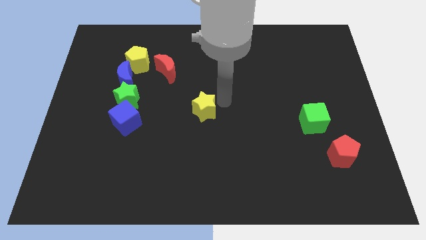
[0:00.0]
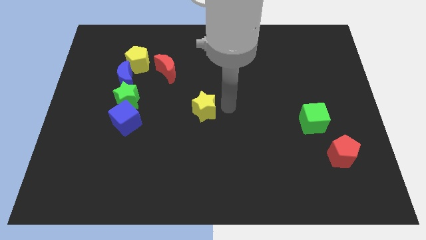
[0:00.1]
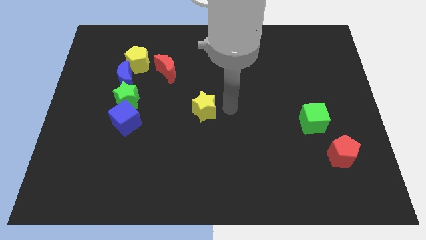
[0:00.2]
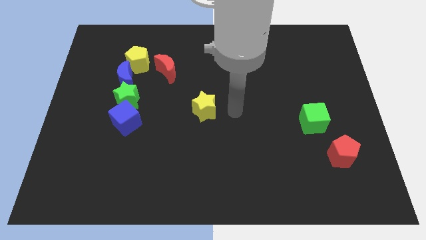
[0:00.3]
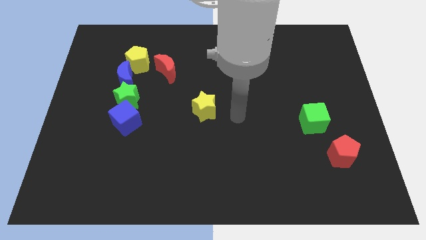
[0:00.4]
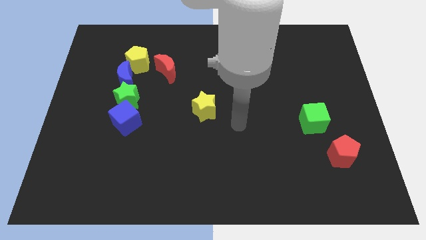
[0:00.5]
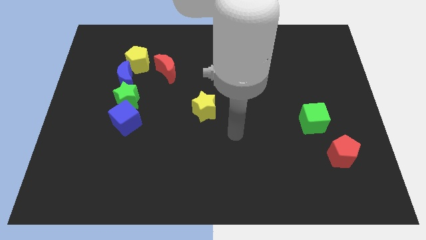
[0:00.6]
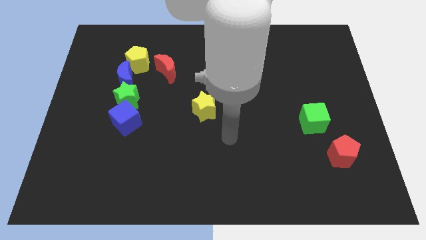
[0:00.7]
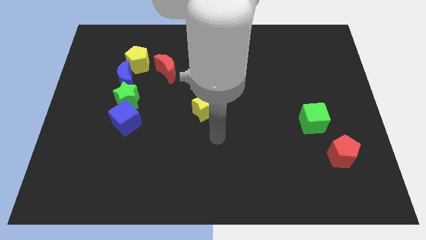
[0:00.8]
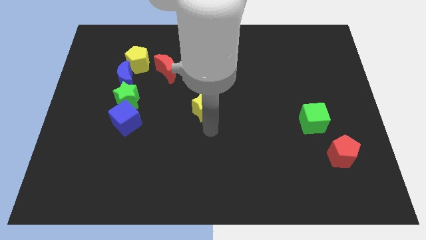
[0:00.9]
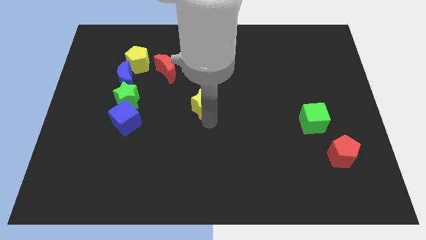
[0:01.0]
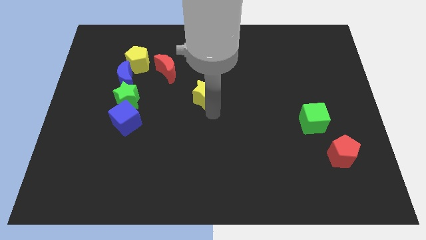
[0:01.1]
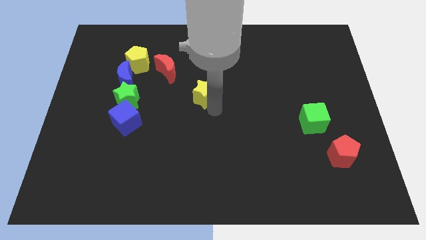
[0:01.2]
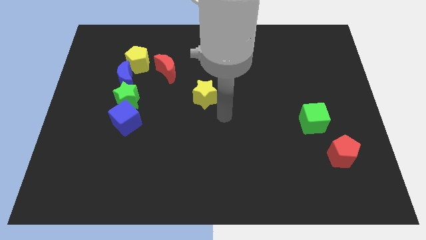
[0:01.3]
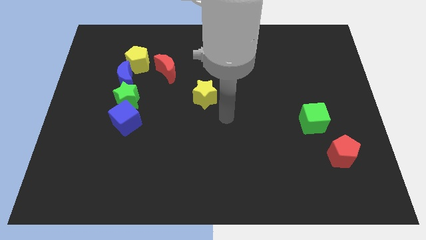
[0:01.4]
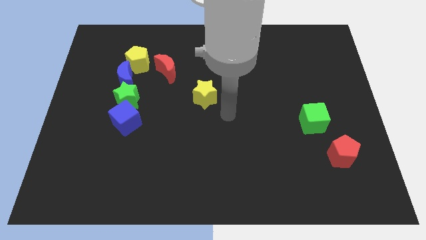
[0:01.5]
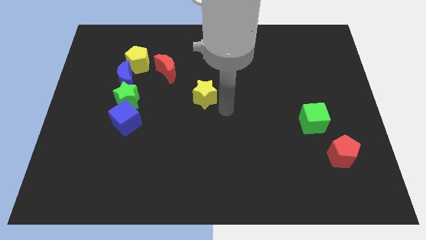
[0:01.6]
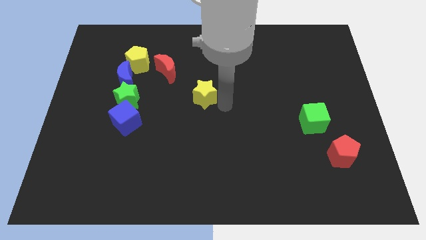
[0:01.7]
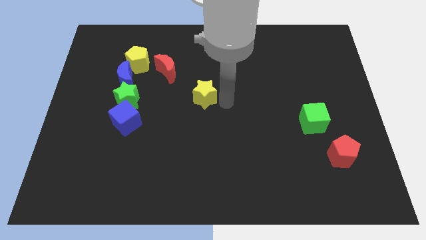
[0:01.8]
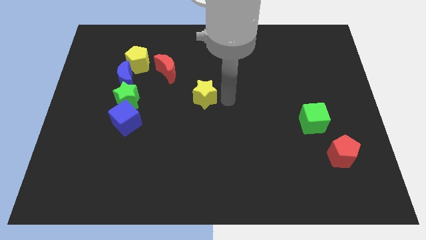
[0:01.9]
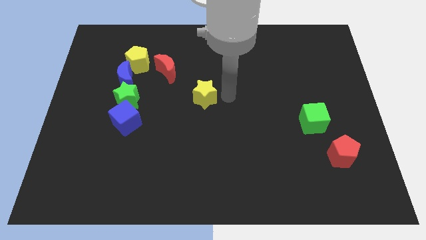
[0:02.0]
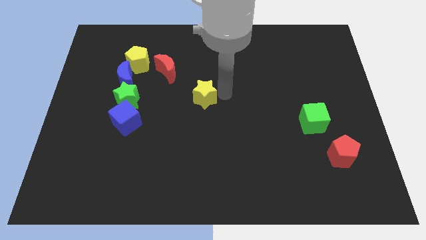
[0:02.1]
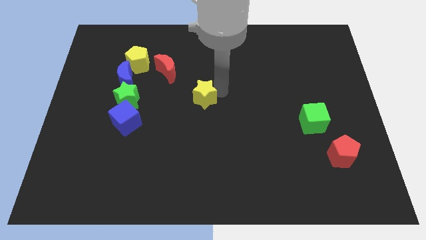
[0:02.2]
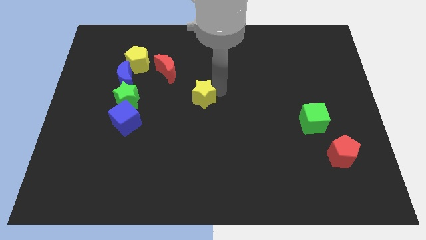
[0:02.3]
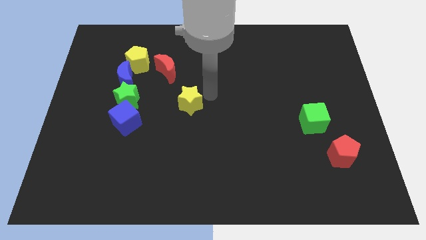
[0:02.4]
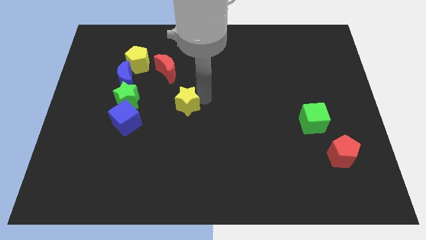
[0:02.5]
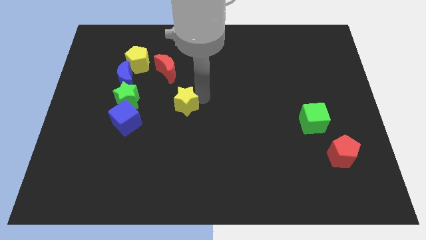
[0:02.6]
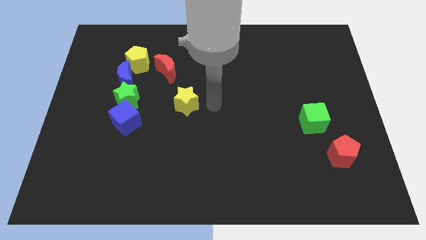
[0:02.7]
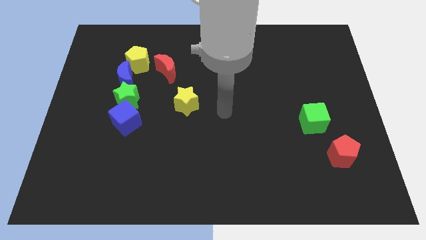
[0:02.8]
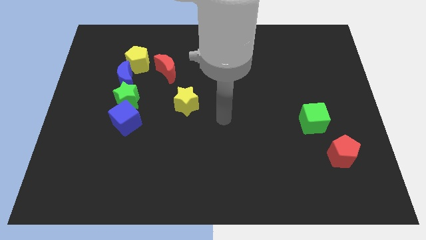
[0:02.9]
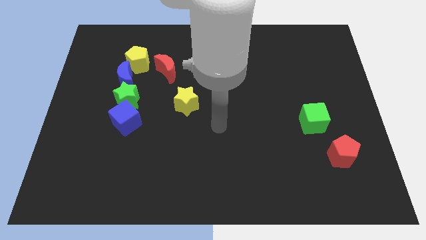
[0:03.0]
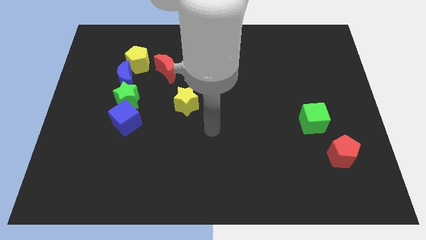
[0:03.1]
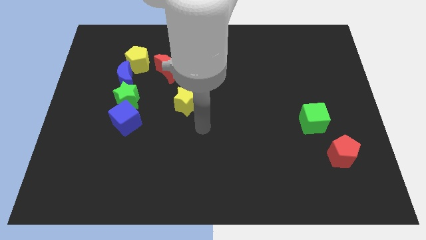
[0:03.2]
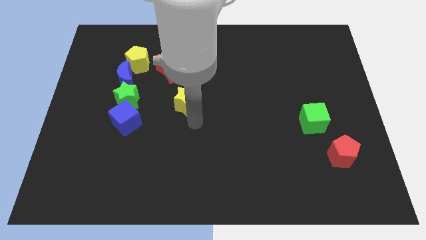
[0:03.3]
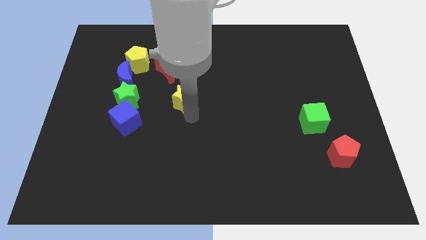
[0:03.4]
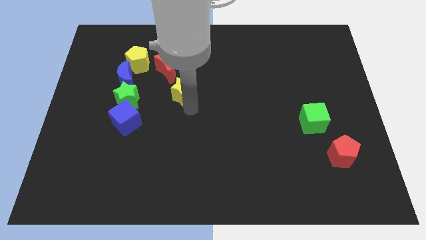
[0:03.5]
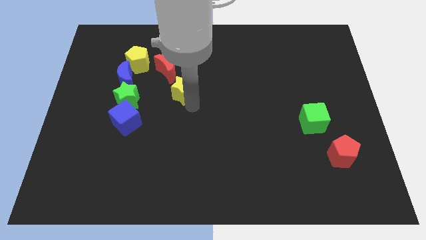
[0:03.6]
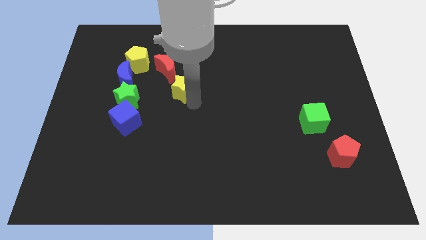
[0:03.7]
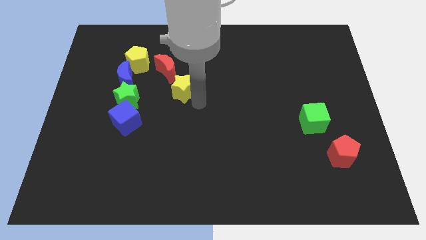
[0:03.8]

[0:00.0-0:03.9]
move the yellow star close to the red crescent

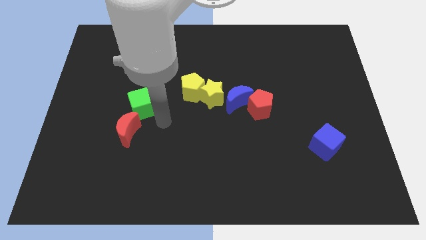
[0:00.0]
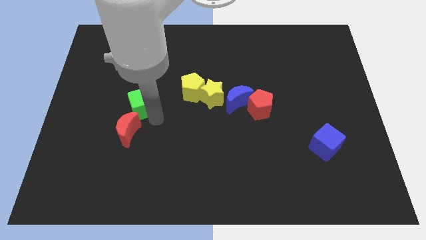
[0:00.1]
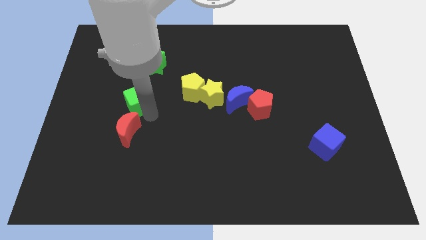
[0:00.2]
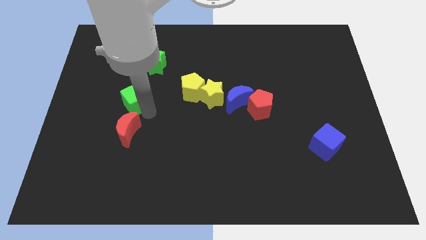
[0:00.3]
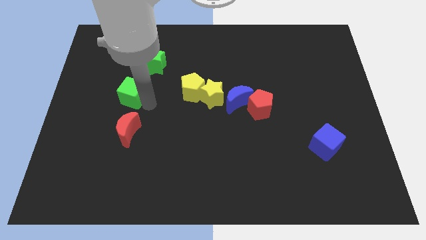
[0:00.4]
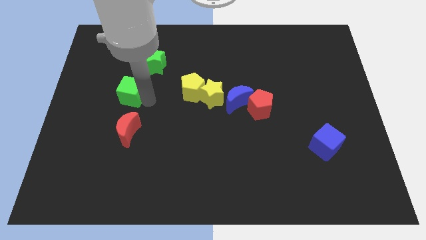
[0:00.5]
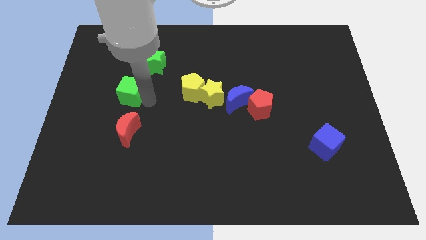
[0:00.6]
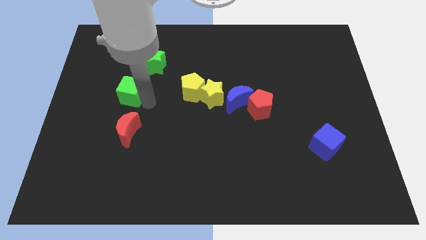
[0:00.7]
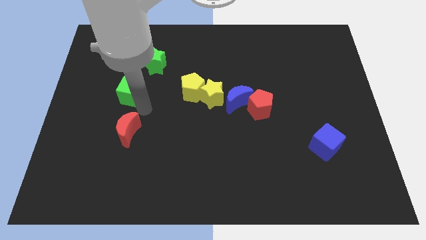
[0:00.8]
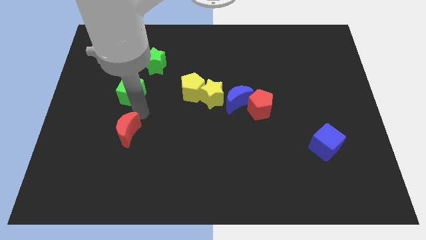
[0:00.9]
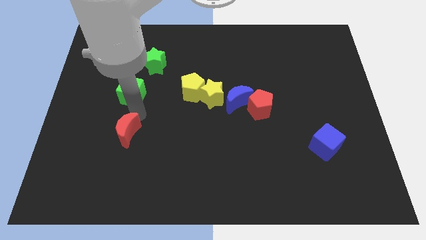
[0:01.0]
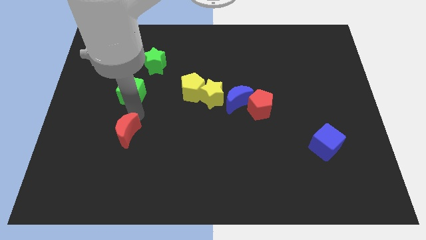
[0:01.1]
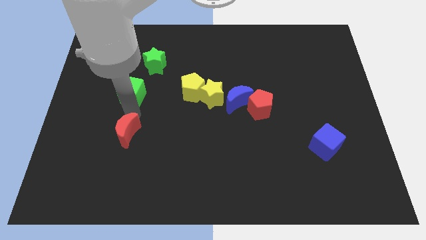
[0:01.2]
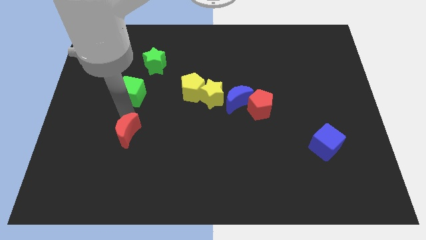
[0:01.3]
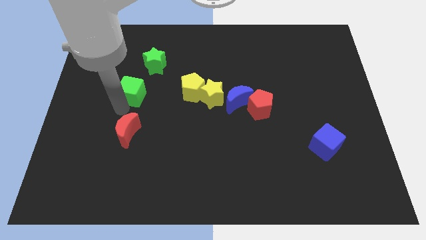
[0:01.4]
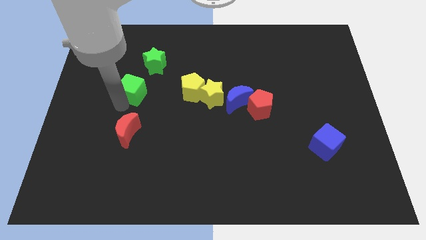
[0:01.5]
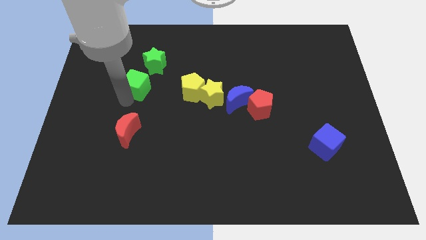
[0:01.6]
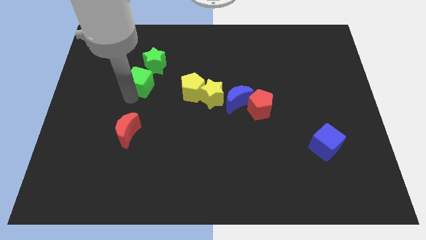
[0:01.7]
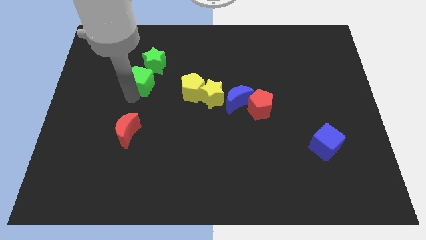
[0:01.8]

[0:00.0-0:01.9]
slide the green cube towards the bottom side of the green star

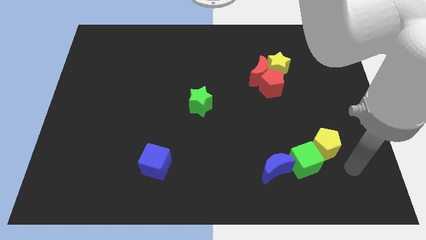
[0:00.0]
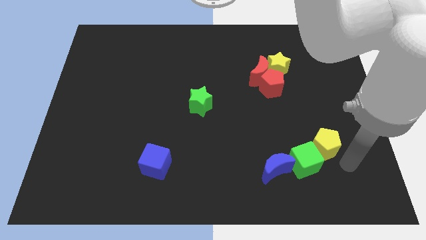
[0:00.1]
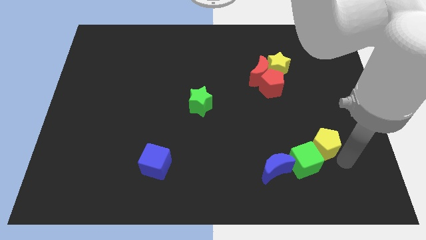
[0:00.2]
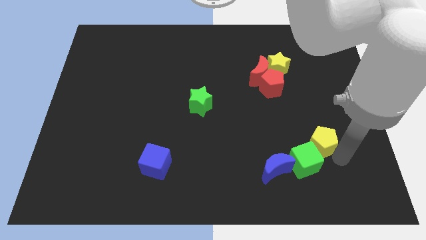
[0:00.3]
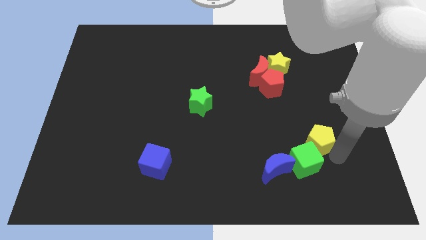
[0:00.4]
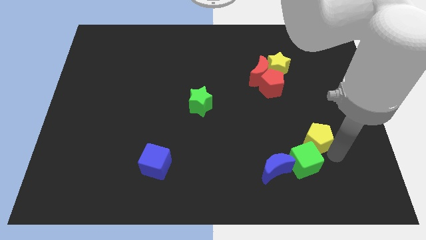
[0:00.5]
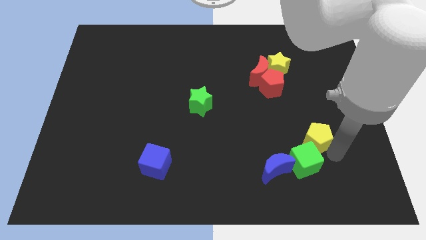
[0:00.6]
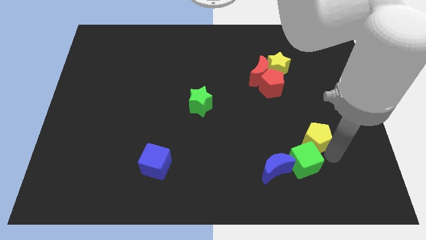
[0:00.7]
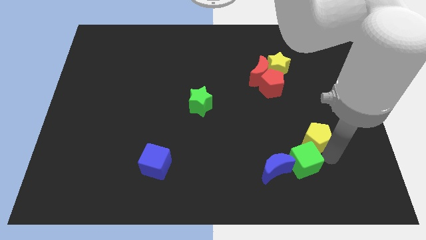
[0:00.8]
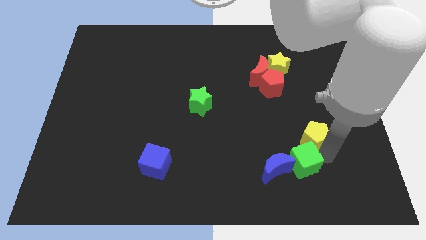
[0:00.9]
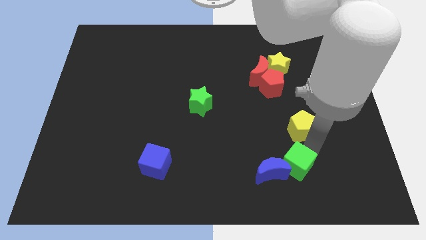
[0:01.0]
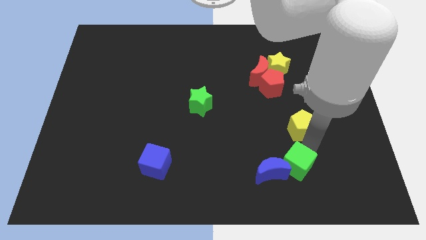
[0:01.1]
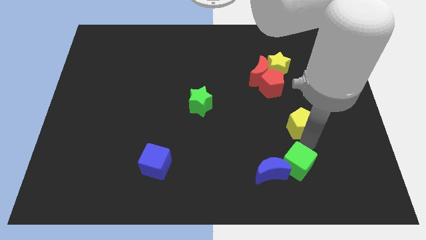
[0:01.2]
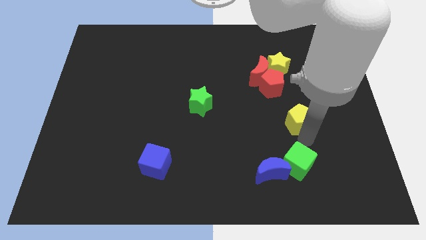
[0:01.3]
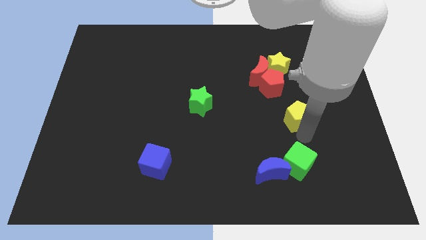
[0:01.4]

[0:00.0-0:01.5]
separate the yellow pentagon from the green cube

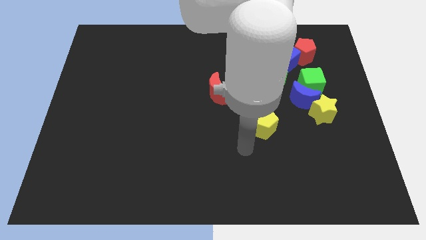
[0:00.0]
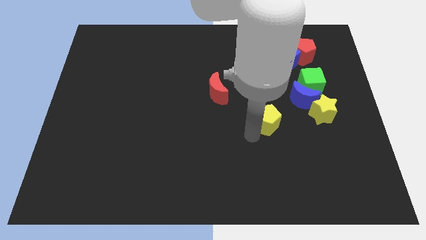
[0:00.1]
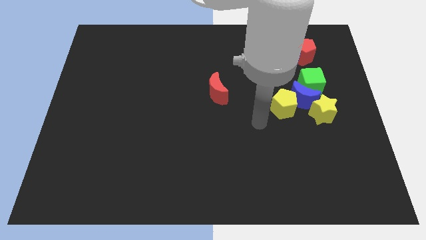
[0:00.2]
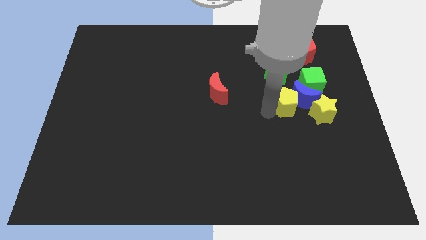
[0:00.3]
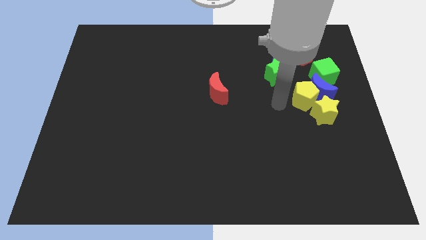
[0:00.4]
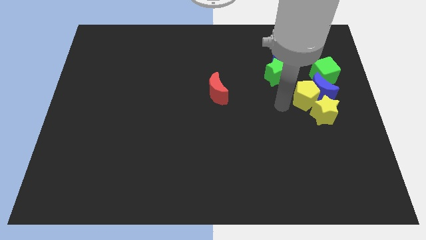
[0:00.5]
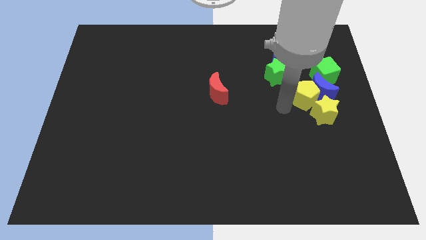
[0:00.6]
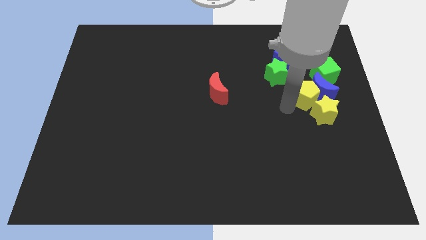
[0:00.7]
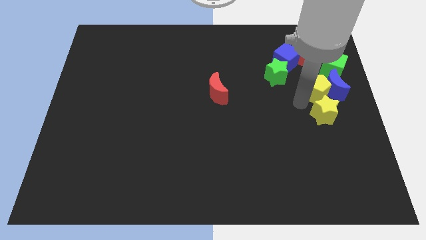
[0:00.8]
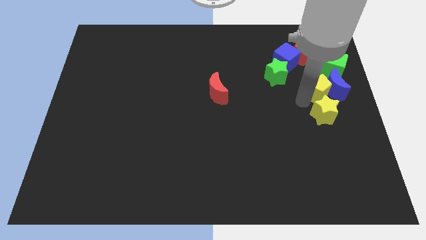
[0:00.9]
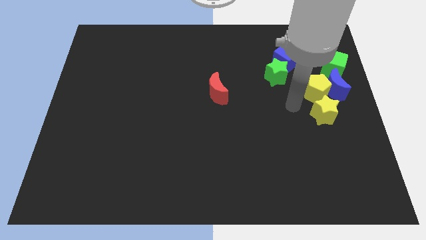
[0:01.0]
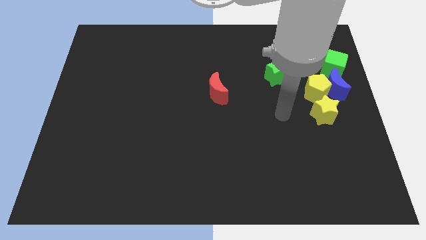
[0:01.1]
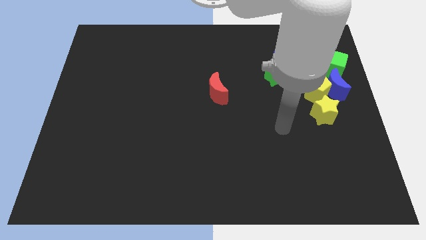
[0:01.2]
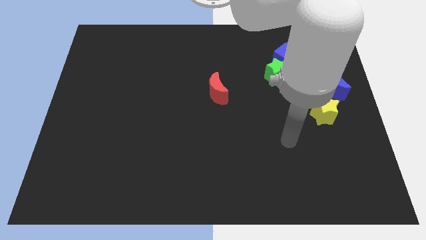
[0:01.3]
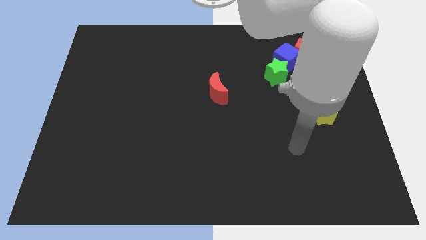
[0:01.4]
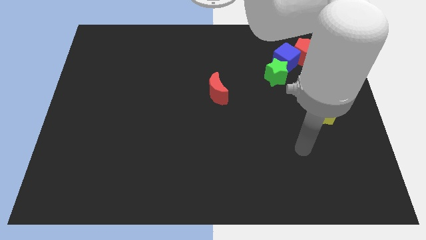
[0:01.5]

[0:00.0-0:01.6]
place the yellow pentagon on the top of the yellow star
